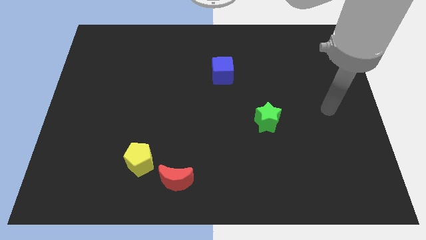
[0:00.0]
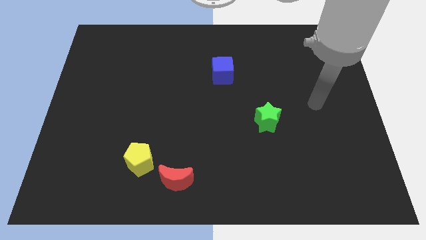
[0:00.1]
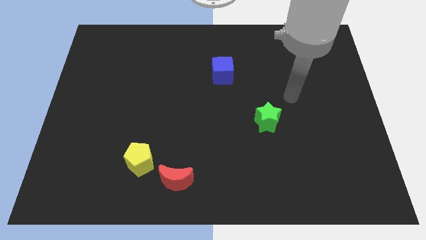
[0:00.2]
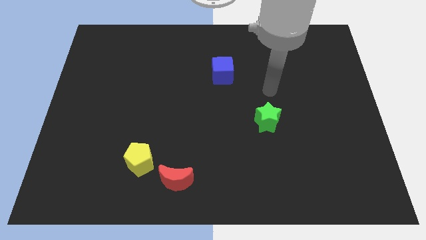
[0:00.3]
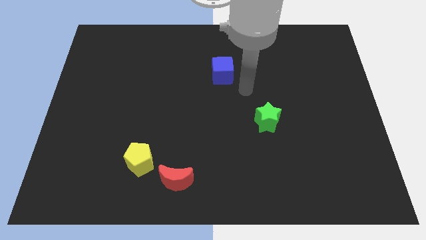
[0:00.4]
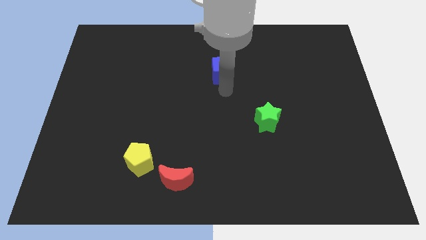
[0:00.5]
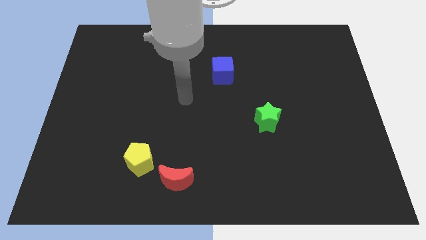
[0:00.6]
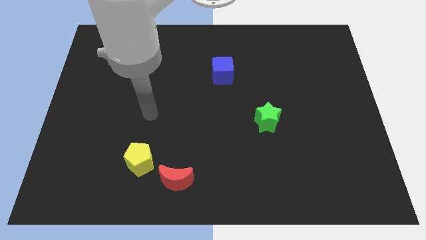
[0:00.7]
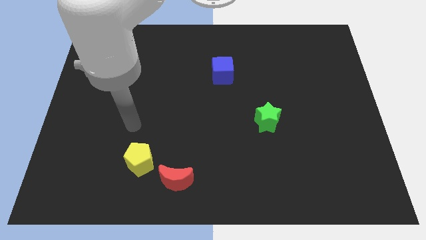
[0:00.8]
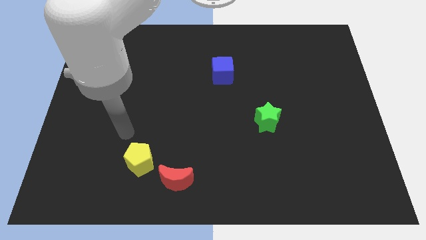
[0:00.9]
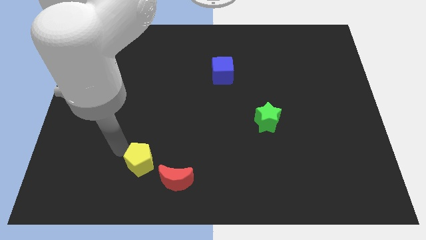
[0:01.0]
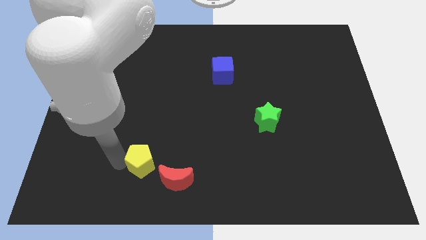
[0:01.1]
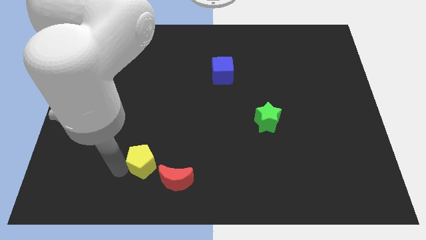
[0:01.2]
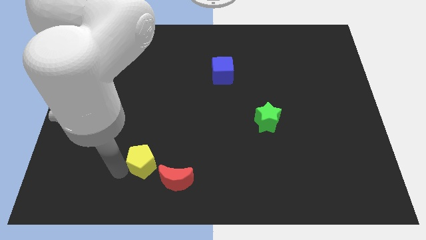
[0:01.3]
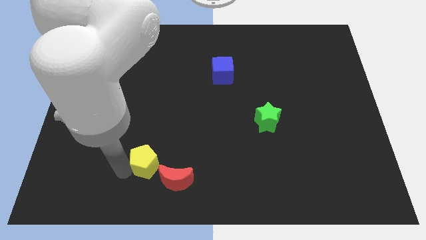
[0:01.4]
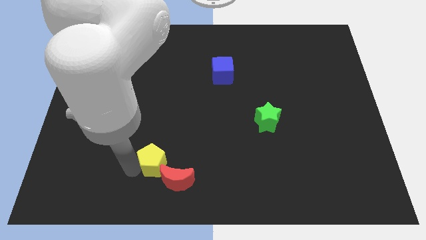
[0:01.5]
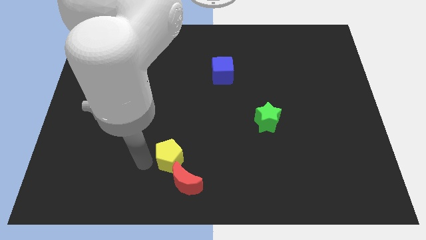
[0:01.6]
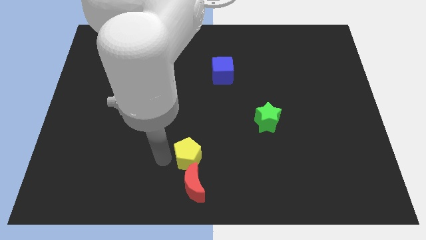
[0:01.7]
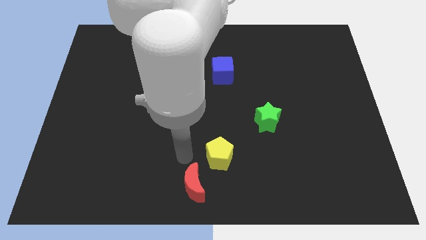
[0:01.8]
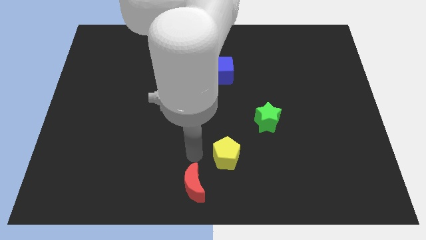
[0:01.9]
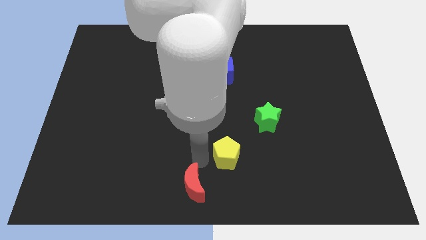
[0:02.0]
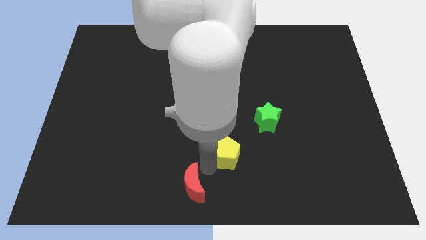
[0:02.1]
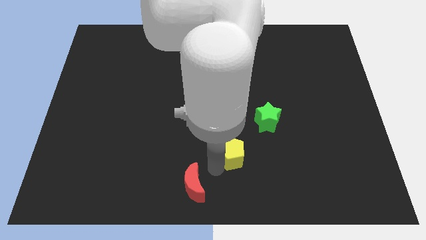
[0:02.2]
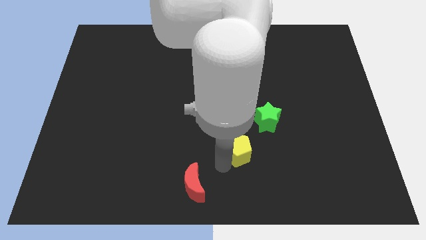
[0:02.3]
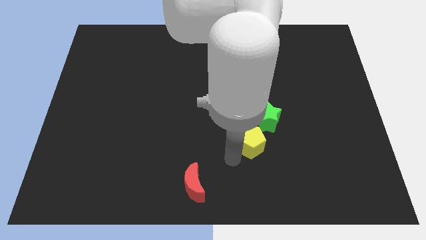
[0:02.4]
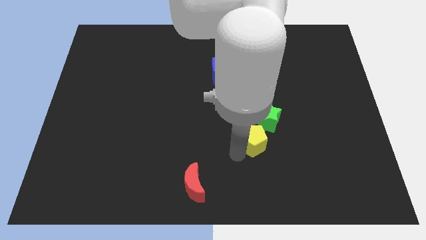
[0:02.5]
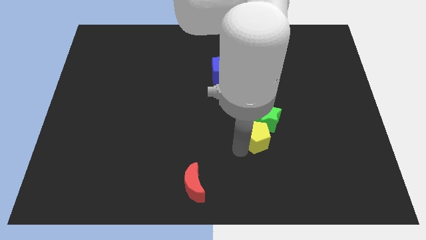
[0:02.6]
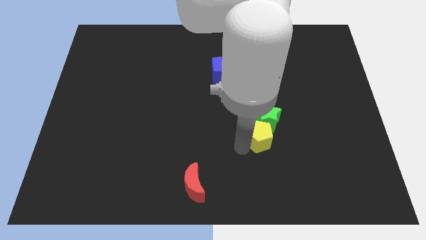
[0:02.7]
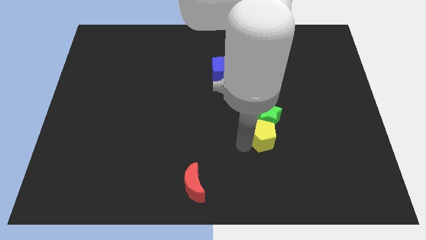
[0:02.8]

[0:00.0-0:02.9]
put the yellow pentagon next to the star

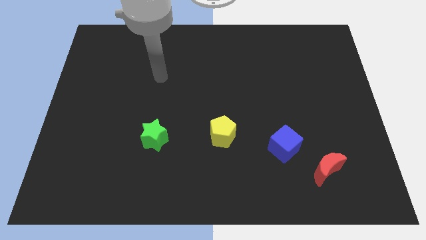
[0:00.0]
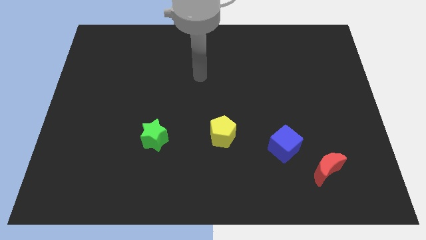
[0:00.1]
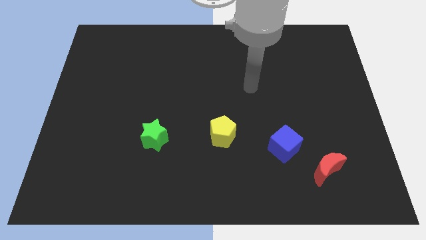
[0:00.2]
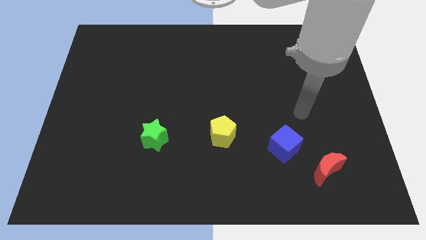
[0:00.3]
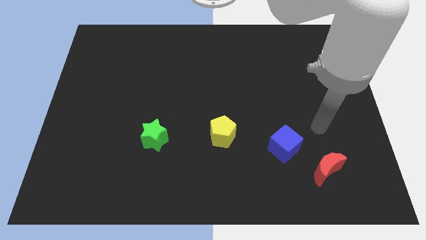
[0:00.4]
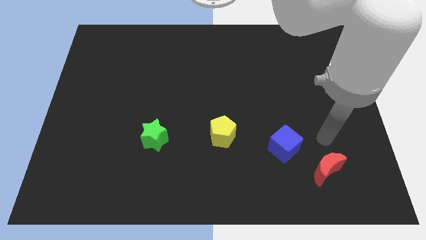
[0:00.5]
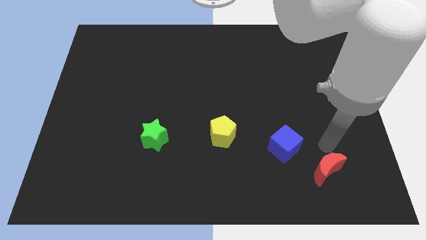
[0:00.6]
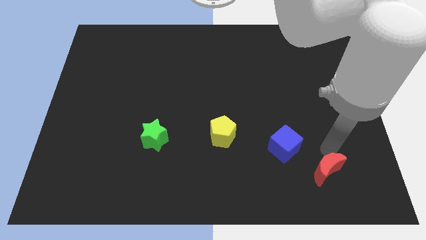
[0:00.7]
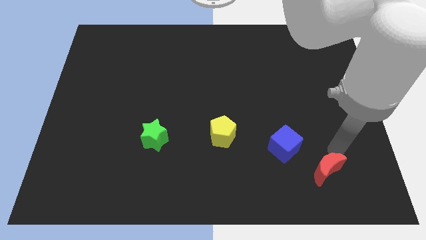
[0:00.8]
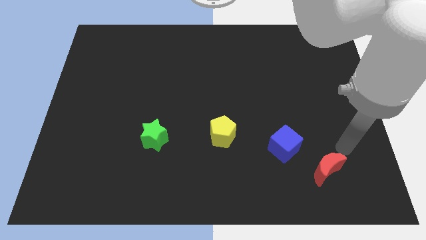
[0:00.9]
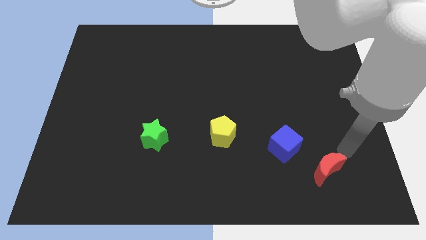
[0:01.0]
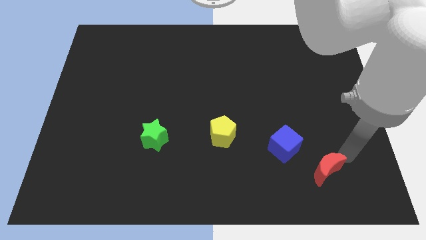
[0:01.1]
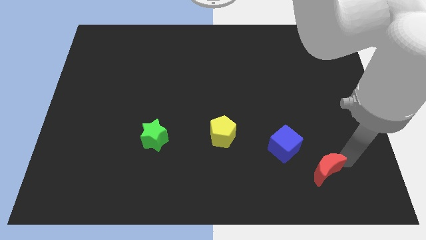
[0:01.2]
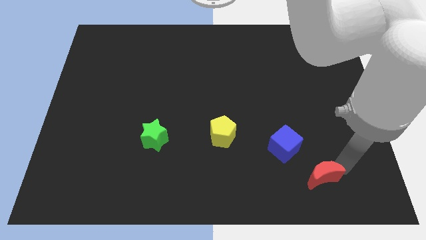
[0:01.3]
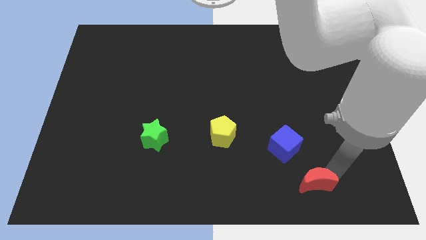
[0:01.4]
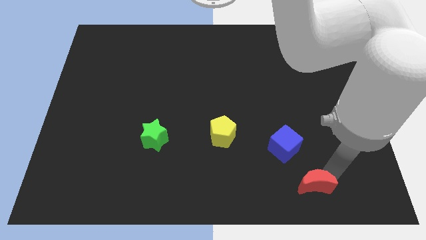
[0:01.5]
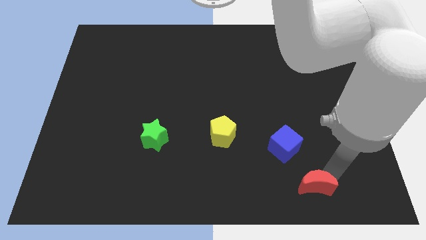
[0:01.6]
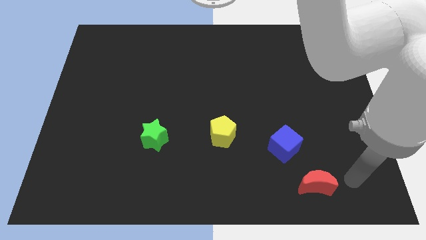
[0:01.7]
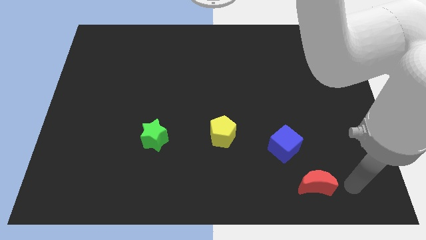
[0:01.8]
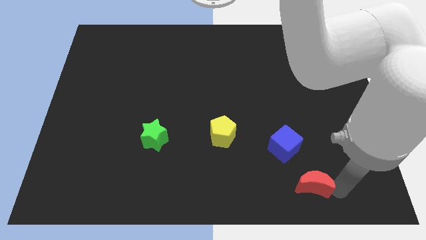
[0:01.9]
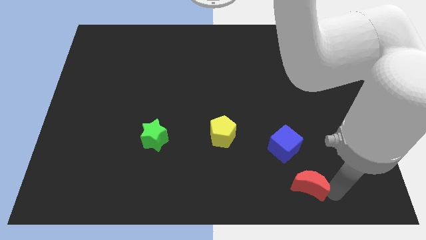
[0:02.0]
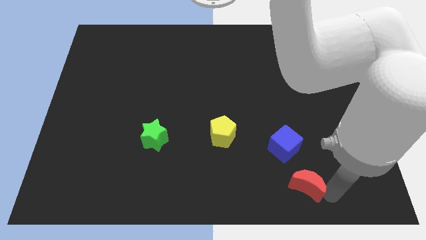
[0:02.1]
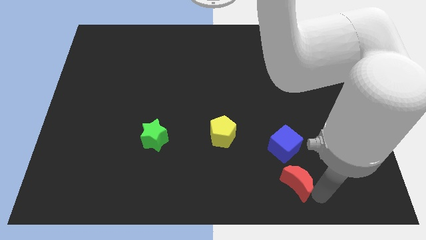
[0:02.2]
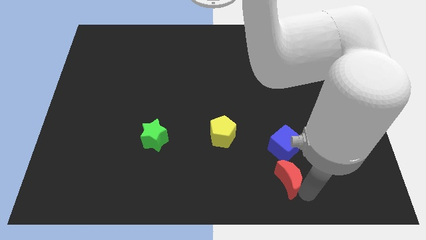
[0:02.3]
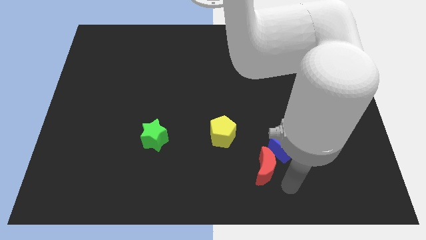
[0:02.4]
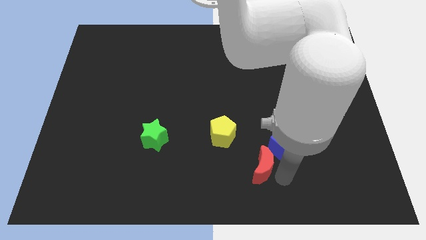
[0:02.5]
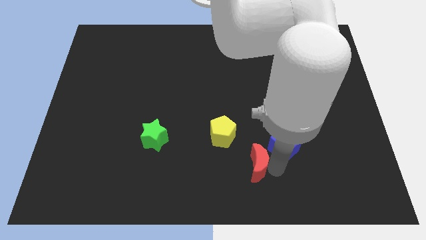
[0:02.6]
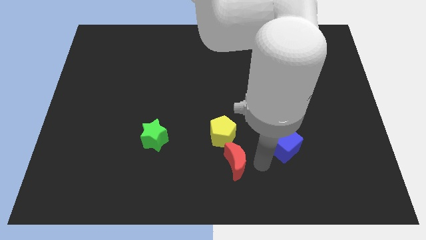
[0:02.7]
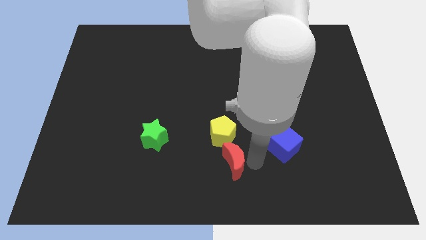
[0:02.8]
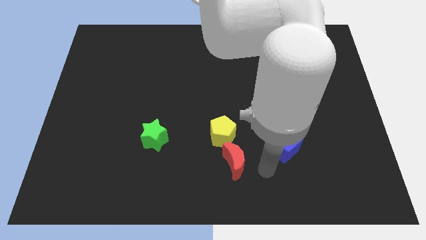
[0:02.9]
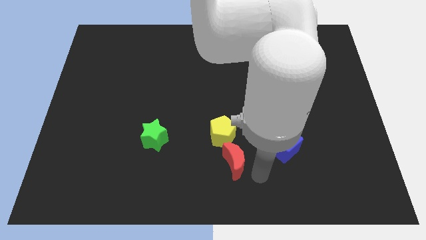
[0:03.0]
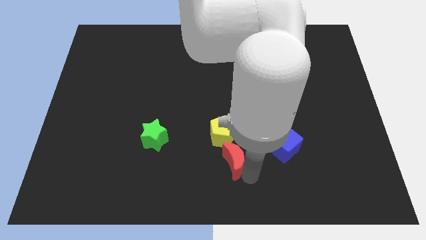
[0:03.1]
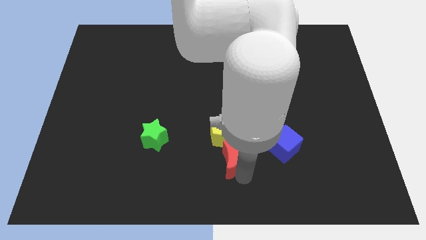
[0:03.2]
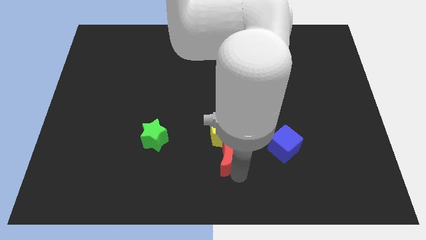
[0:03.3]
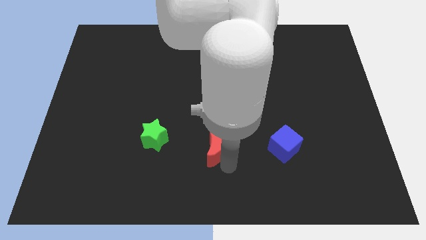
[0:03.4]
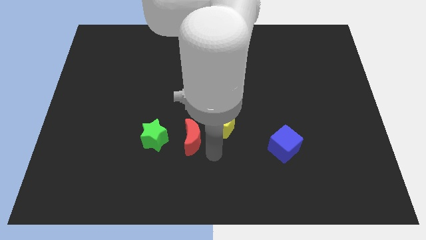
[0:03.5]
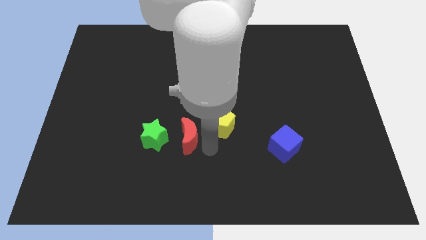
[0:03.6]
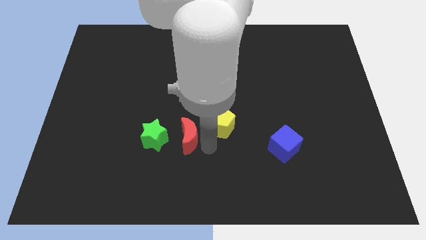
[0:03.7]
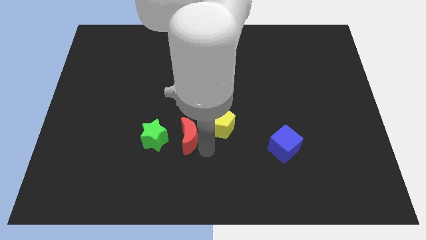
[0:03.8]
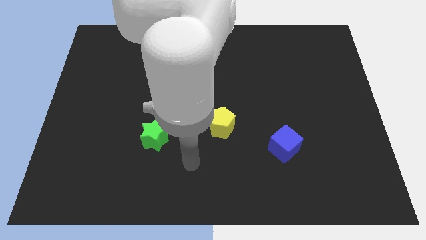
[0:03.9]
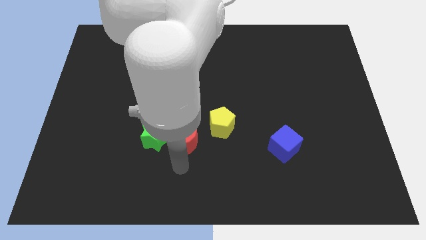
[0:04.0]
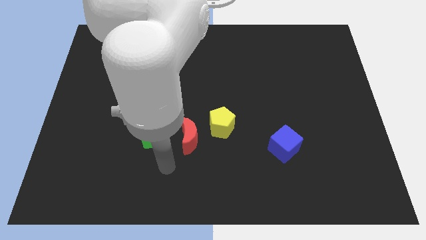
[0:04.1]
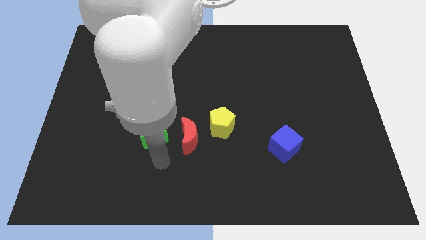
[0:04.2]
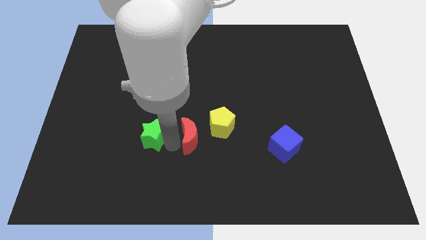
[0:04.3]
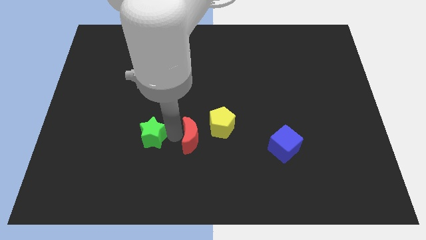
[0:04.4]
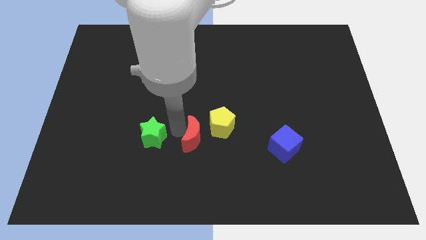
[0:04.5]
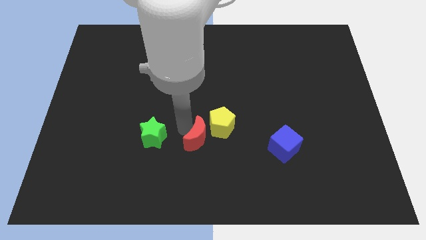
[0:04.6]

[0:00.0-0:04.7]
move the red moon next to the pentagon

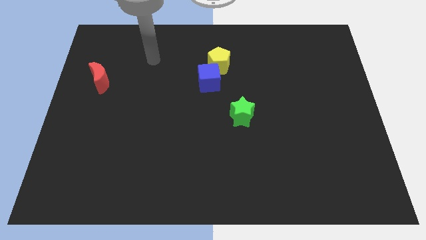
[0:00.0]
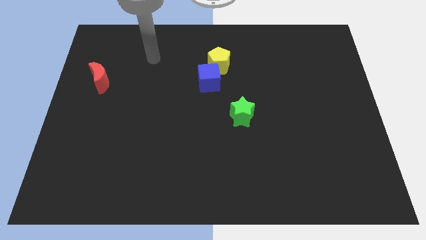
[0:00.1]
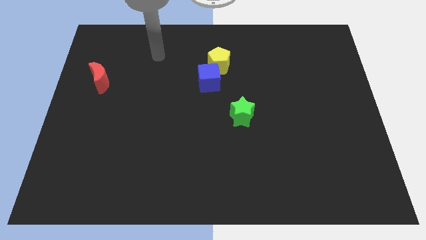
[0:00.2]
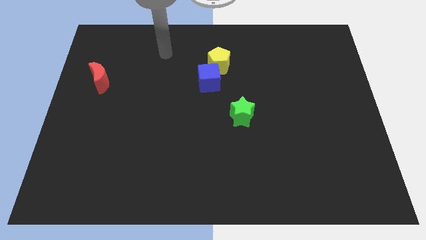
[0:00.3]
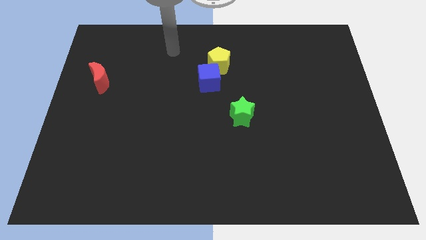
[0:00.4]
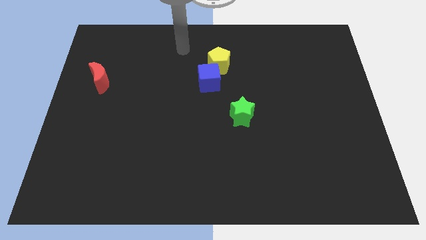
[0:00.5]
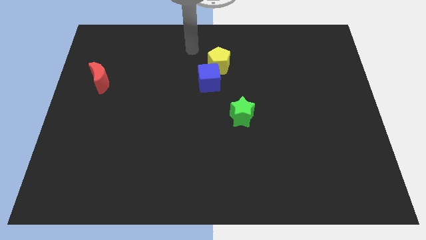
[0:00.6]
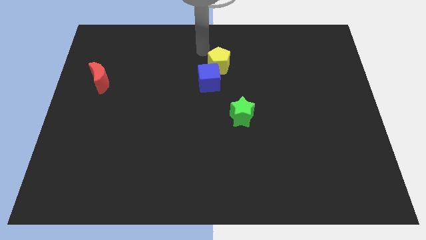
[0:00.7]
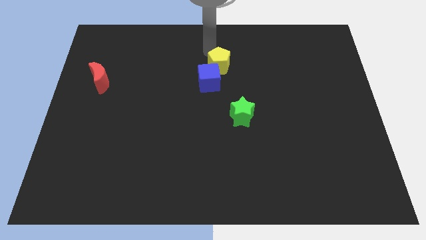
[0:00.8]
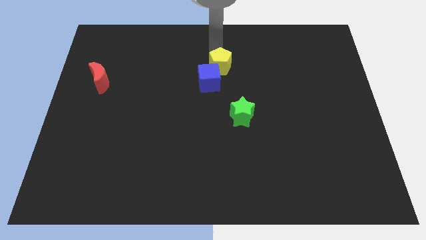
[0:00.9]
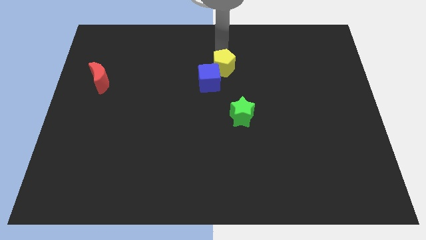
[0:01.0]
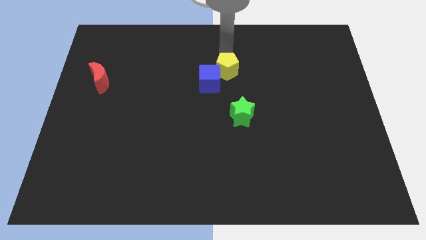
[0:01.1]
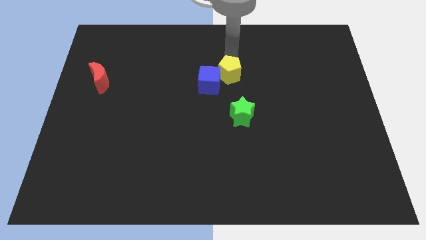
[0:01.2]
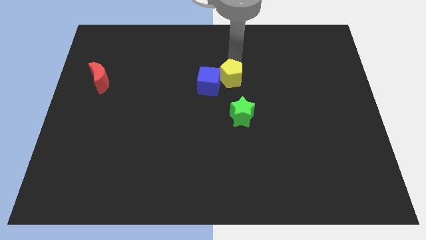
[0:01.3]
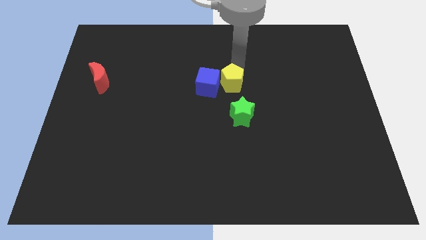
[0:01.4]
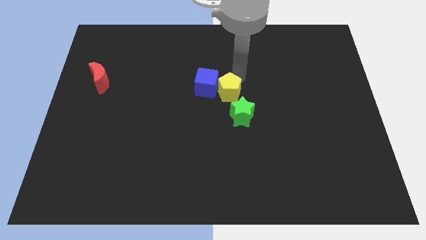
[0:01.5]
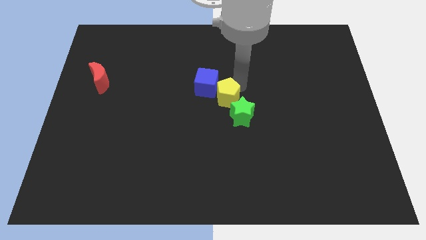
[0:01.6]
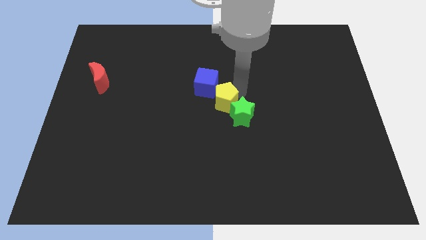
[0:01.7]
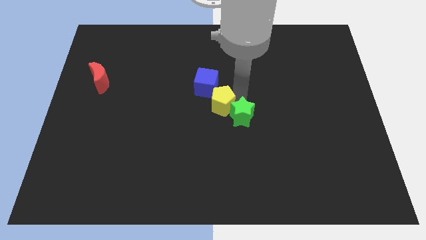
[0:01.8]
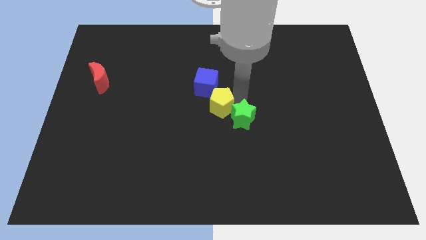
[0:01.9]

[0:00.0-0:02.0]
put the yellow block to the green block
